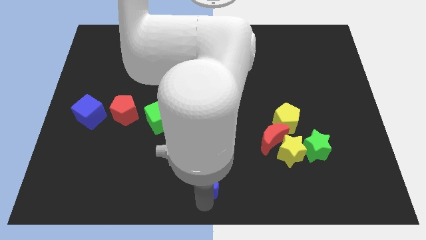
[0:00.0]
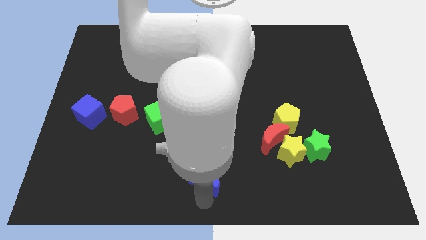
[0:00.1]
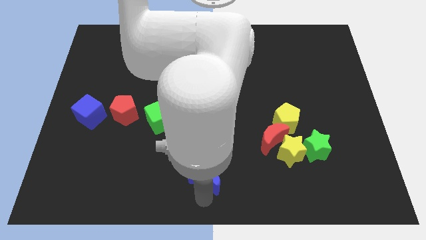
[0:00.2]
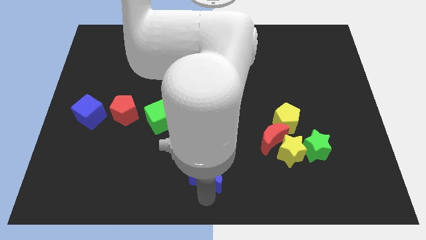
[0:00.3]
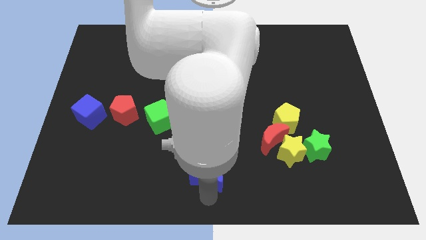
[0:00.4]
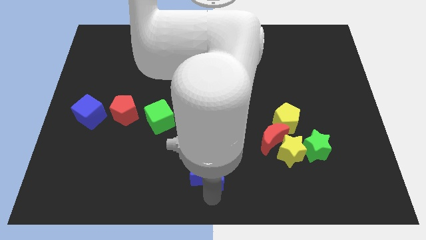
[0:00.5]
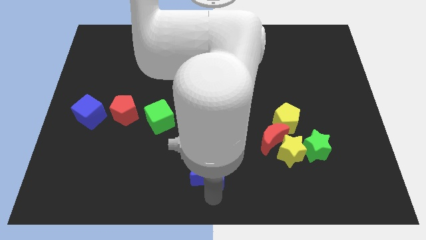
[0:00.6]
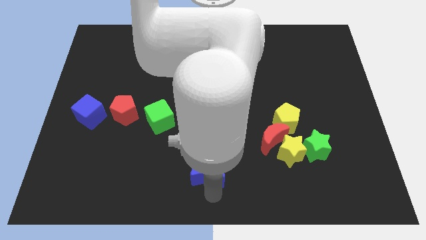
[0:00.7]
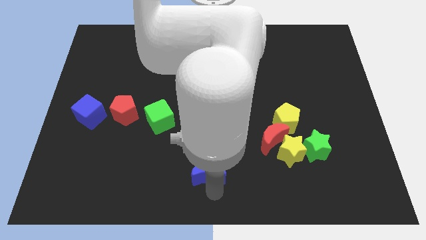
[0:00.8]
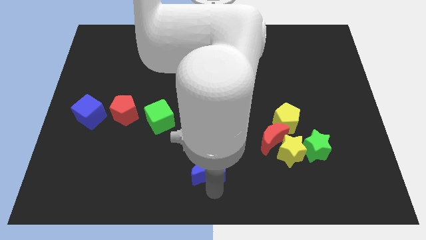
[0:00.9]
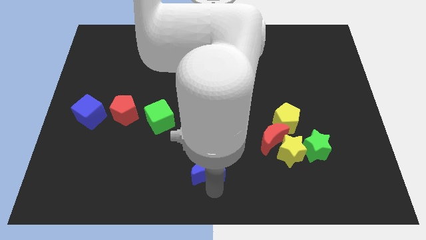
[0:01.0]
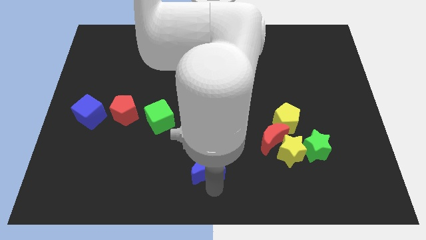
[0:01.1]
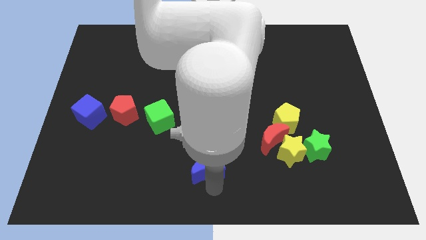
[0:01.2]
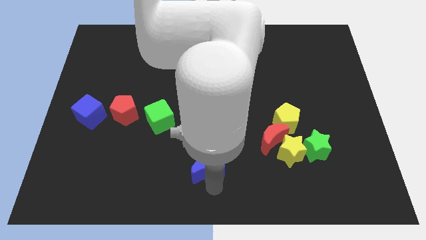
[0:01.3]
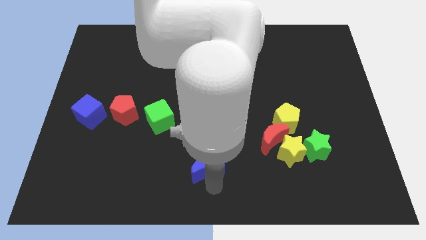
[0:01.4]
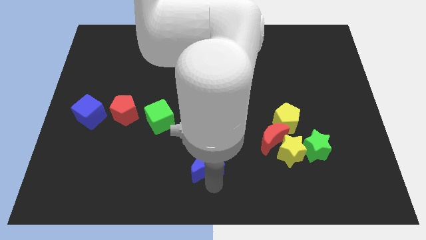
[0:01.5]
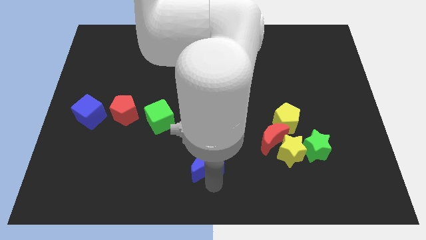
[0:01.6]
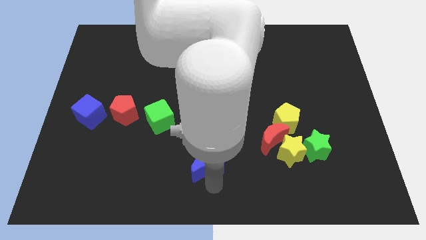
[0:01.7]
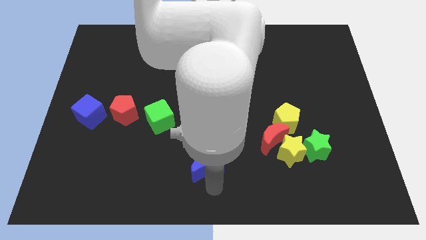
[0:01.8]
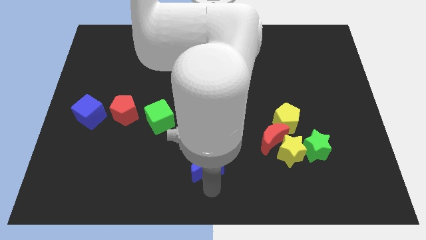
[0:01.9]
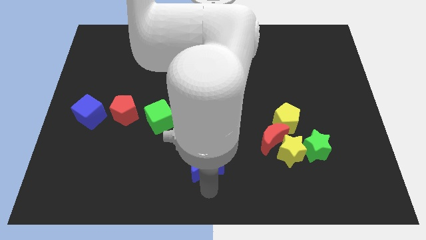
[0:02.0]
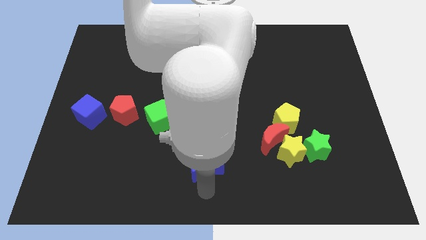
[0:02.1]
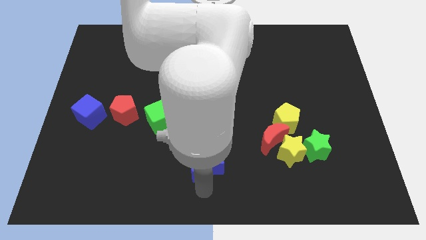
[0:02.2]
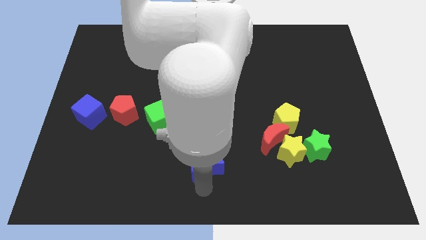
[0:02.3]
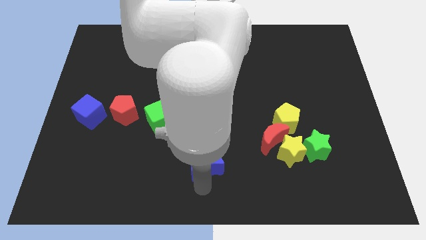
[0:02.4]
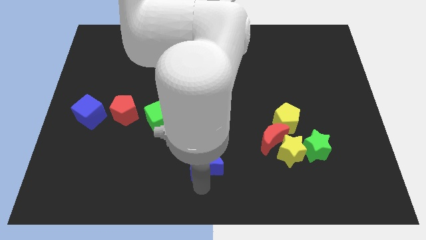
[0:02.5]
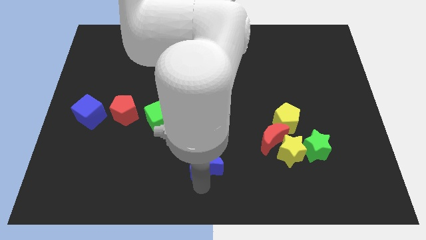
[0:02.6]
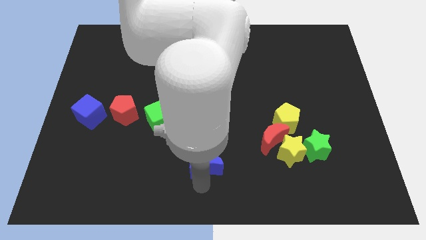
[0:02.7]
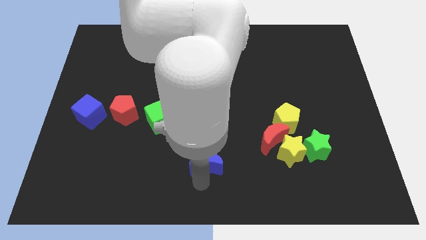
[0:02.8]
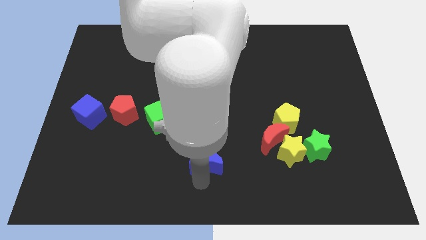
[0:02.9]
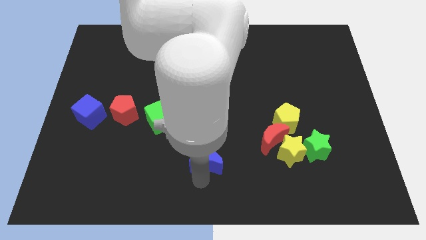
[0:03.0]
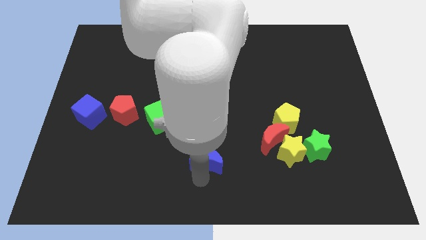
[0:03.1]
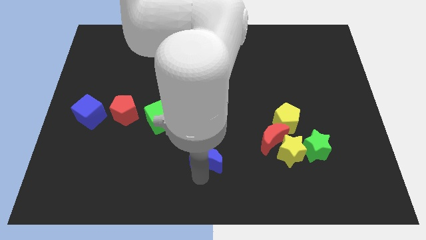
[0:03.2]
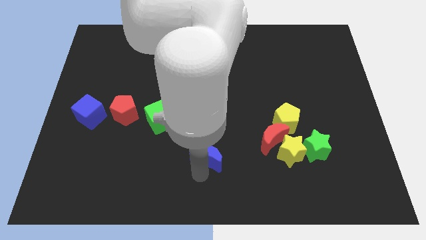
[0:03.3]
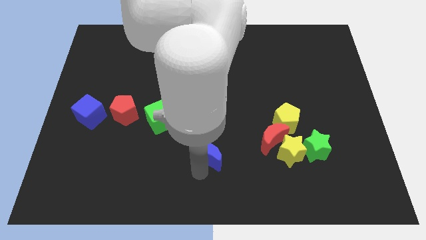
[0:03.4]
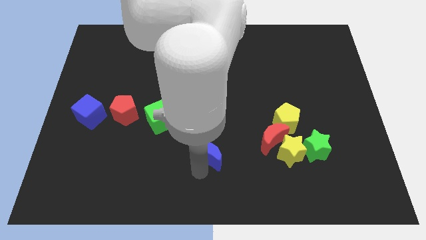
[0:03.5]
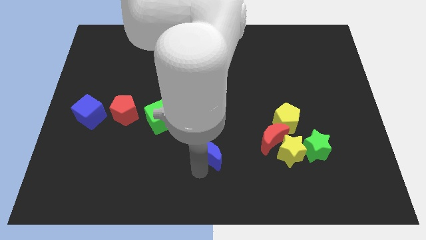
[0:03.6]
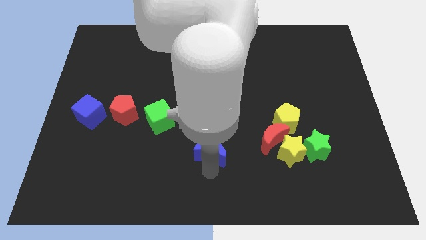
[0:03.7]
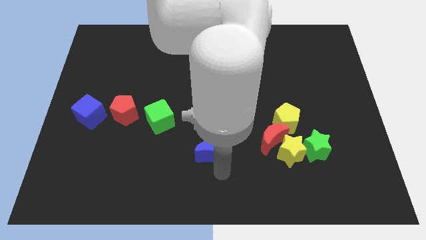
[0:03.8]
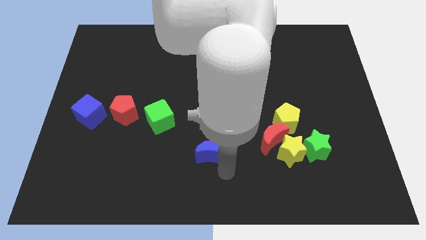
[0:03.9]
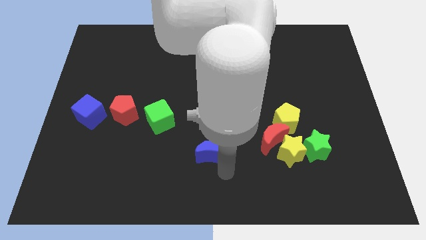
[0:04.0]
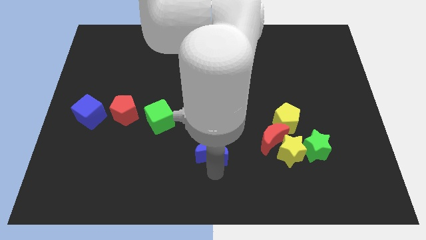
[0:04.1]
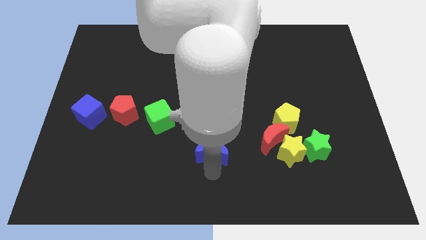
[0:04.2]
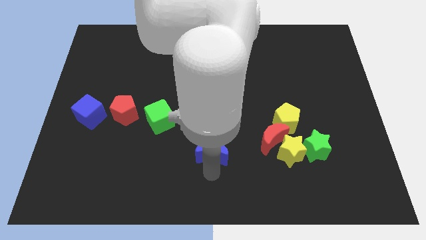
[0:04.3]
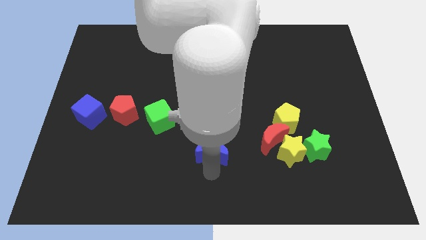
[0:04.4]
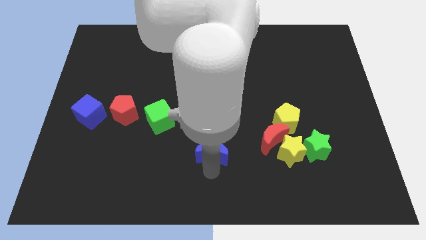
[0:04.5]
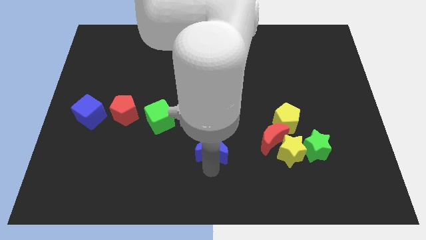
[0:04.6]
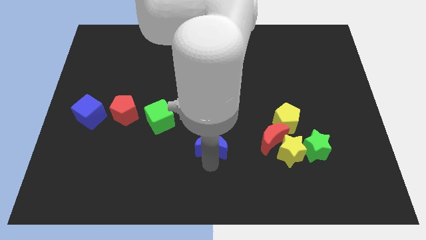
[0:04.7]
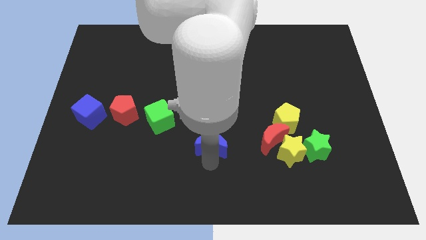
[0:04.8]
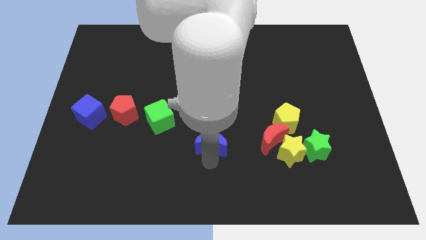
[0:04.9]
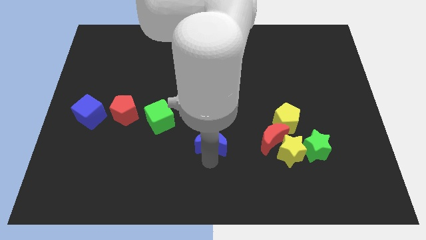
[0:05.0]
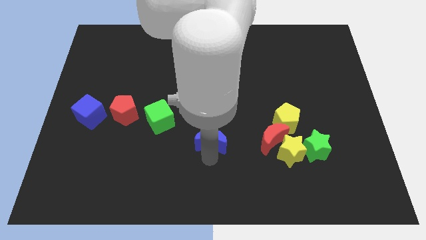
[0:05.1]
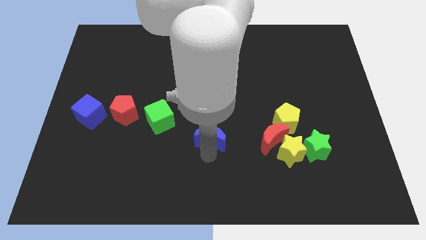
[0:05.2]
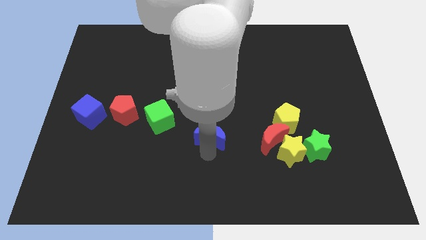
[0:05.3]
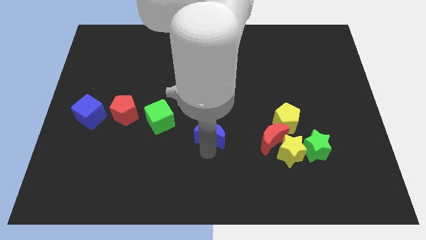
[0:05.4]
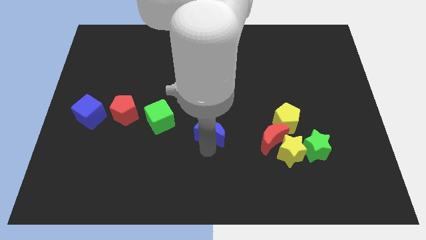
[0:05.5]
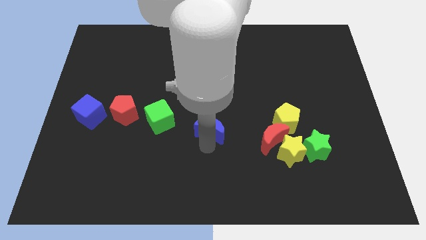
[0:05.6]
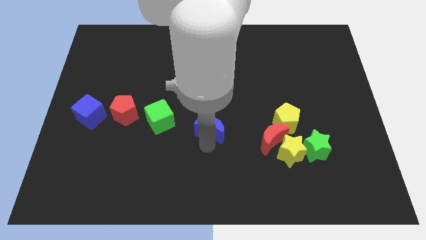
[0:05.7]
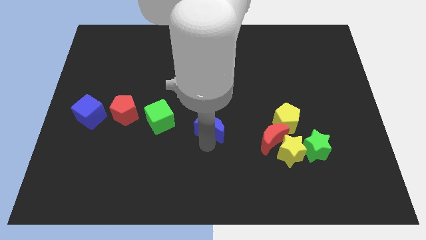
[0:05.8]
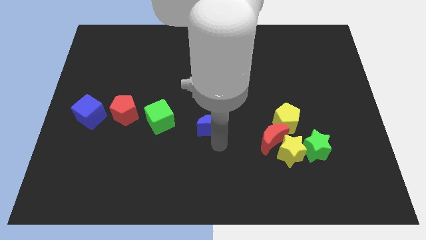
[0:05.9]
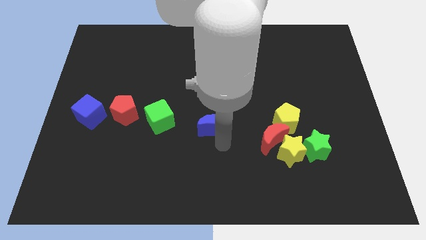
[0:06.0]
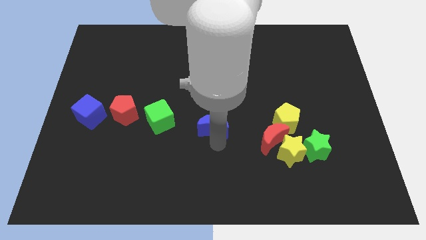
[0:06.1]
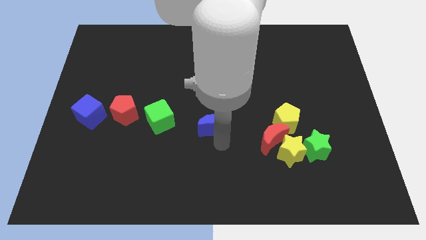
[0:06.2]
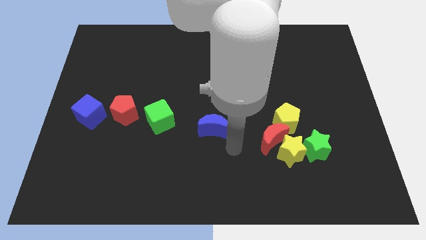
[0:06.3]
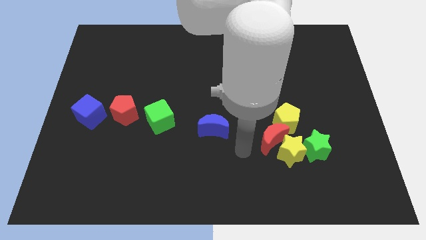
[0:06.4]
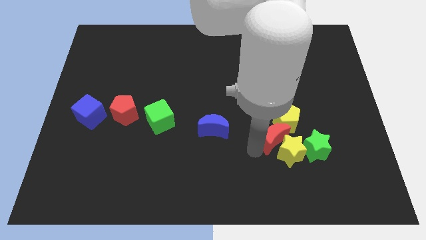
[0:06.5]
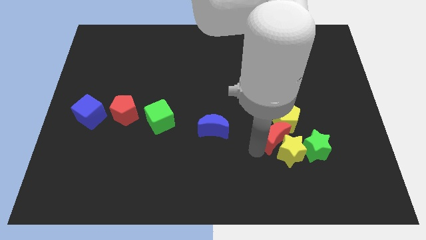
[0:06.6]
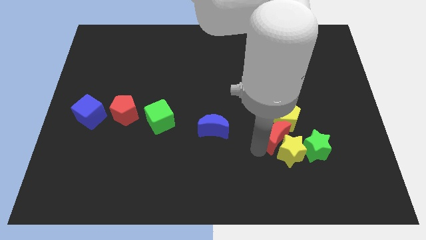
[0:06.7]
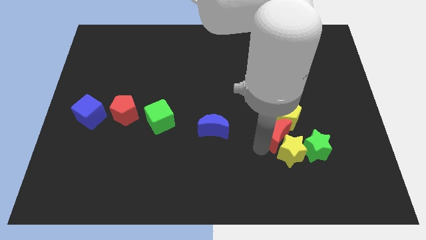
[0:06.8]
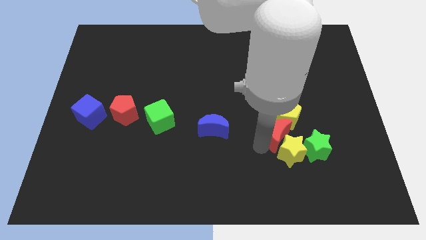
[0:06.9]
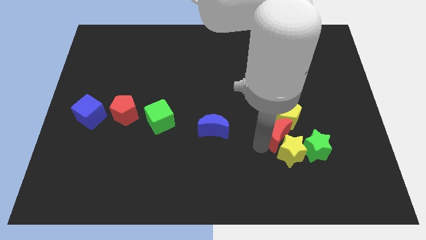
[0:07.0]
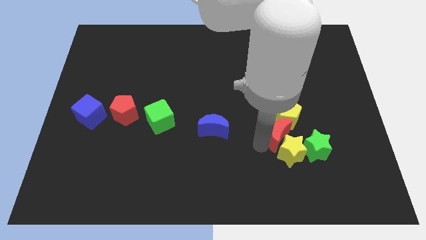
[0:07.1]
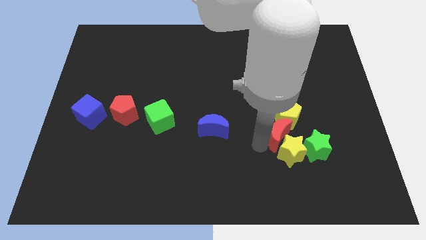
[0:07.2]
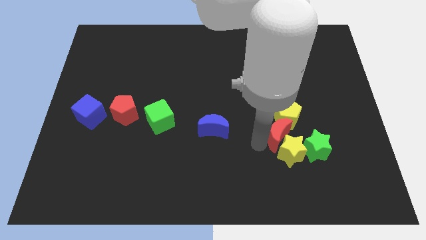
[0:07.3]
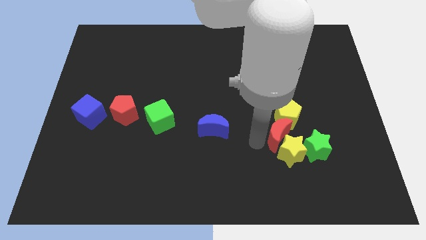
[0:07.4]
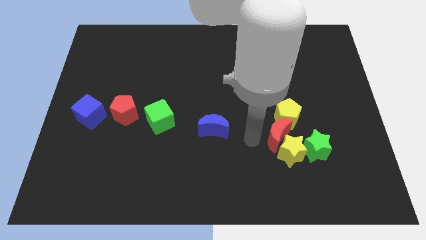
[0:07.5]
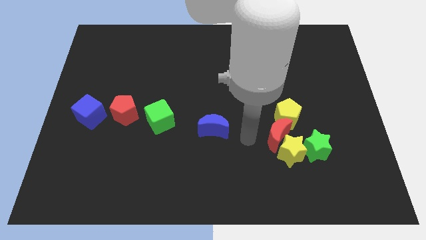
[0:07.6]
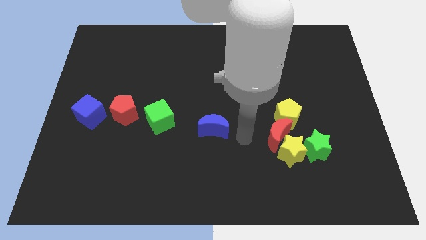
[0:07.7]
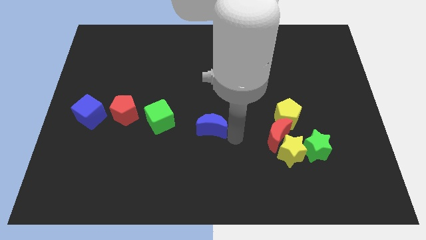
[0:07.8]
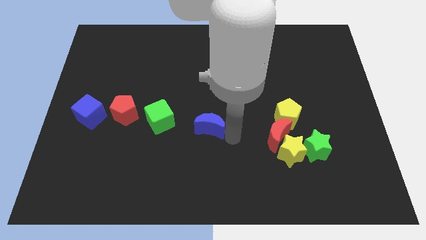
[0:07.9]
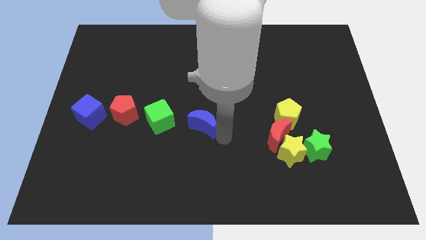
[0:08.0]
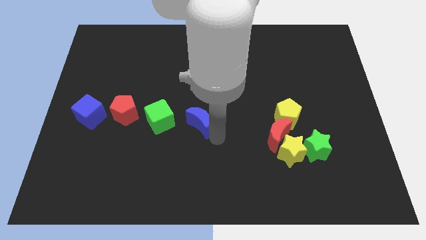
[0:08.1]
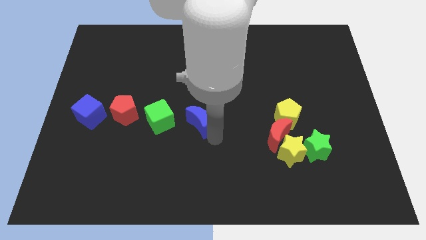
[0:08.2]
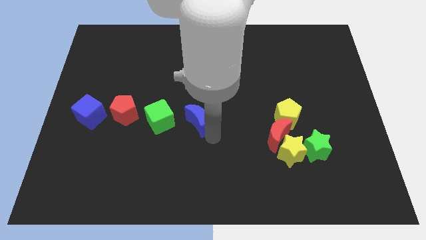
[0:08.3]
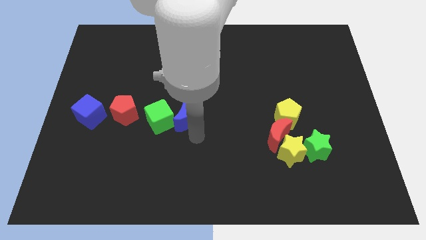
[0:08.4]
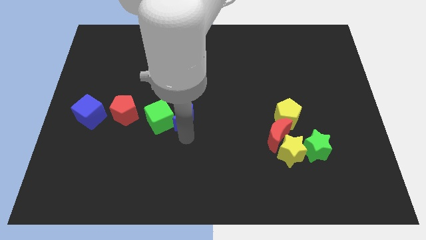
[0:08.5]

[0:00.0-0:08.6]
move blue moon into green cube

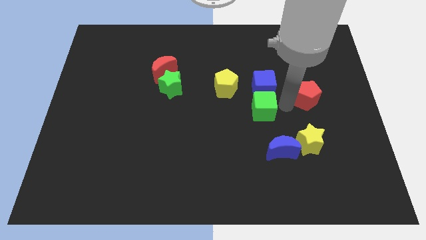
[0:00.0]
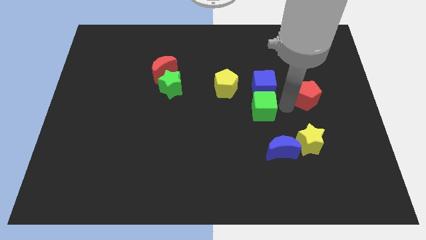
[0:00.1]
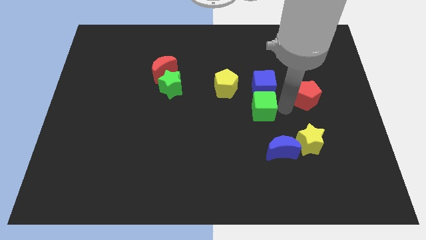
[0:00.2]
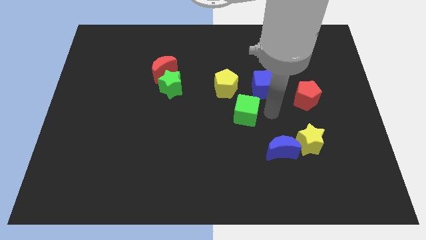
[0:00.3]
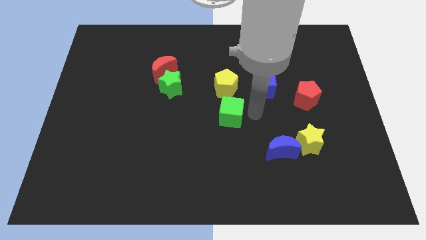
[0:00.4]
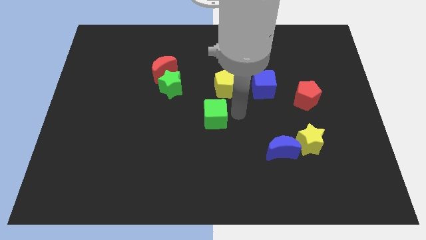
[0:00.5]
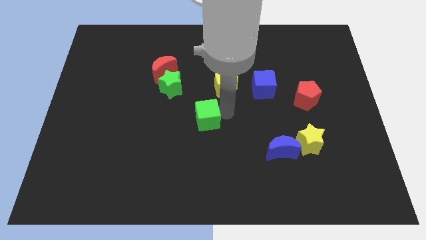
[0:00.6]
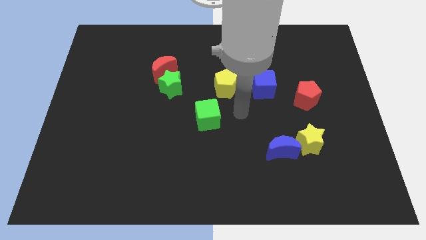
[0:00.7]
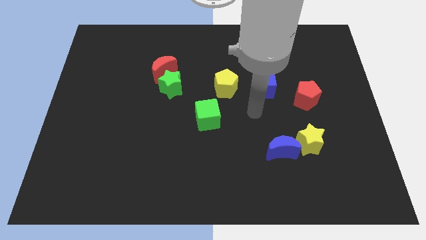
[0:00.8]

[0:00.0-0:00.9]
push the green cube slightly towards the left
